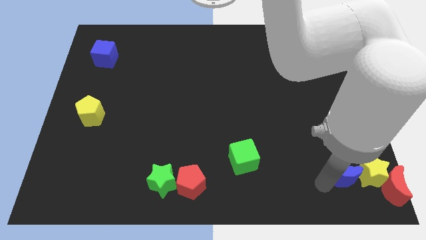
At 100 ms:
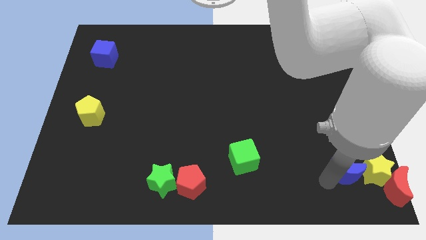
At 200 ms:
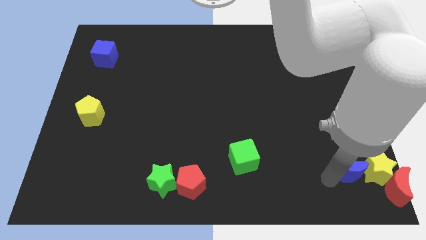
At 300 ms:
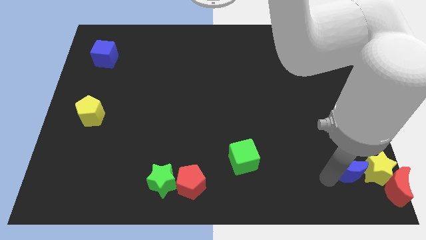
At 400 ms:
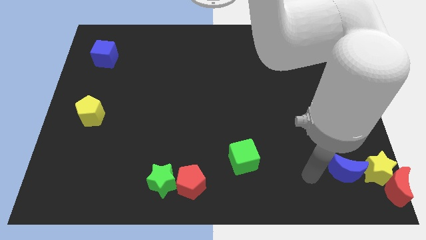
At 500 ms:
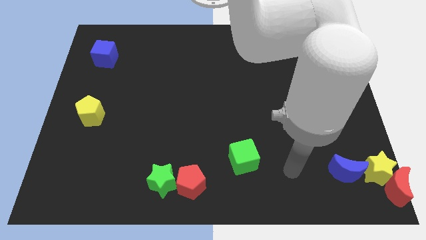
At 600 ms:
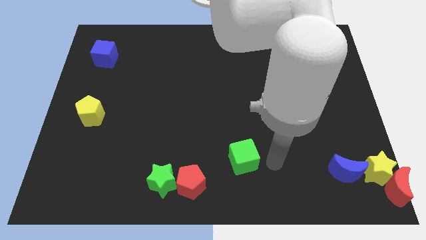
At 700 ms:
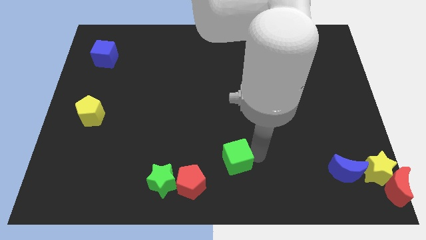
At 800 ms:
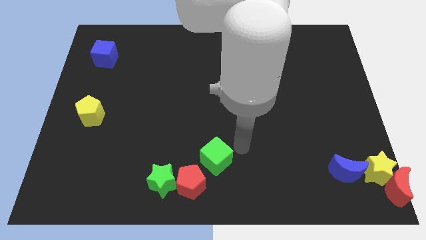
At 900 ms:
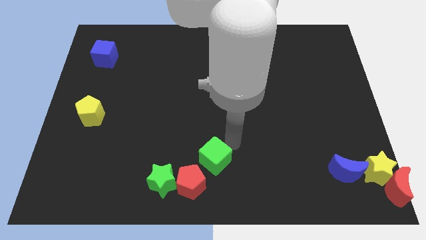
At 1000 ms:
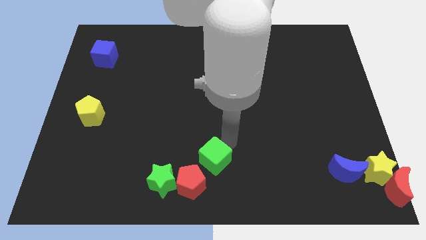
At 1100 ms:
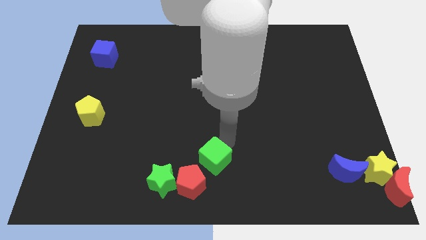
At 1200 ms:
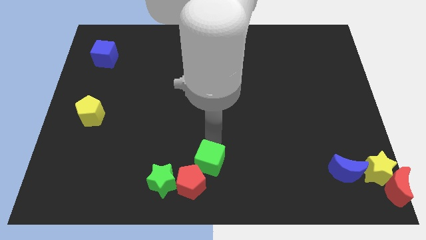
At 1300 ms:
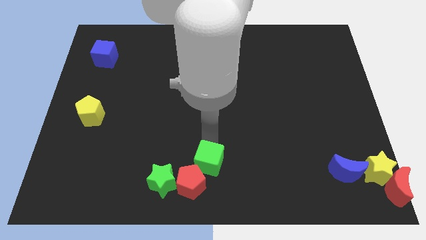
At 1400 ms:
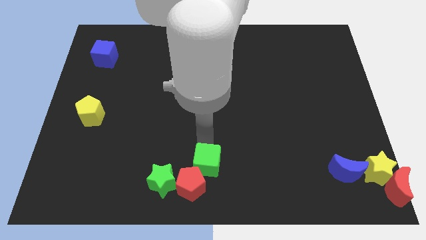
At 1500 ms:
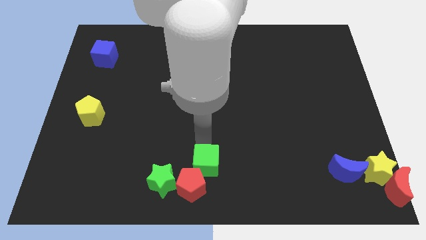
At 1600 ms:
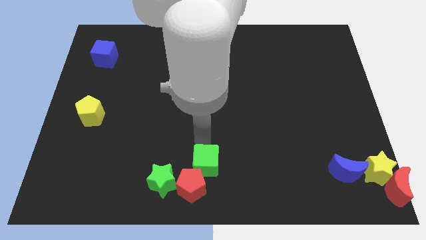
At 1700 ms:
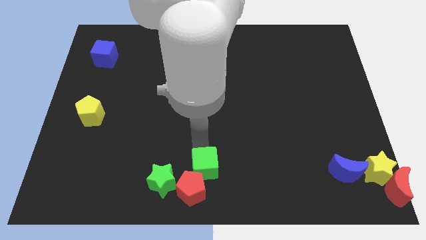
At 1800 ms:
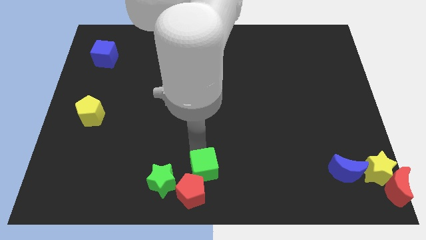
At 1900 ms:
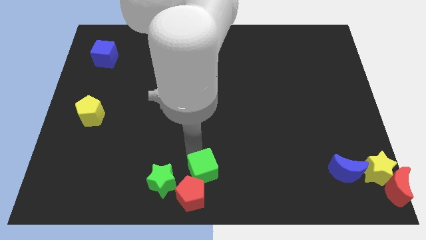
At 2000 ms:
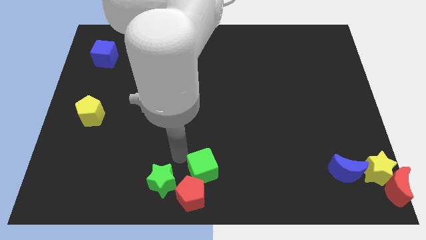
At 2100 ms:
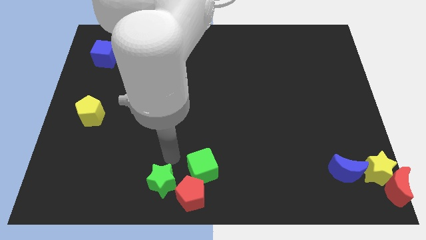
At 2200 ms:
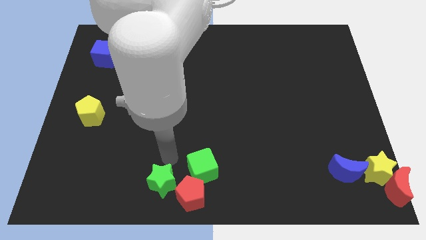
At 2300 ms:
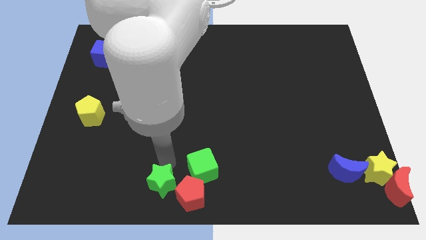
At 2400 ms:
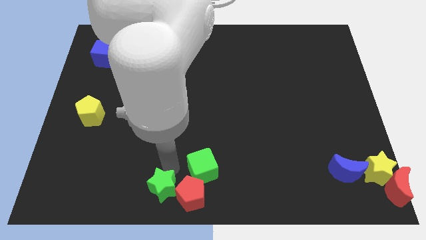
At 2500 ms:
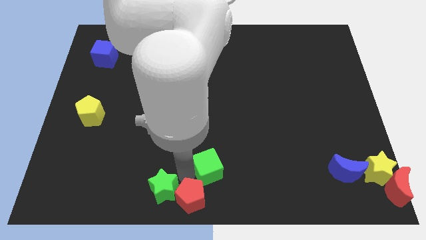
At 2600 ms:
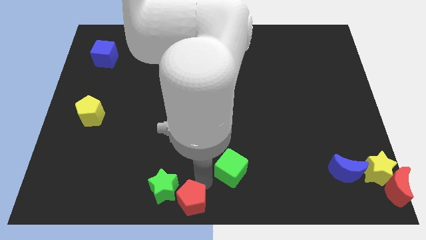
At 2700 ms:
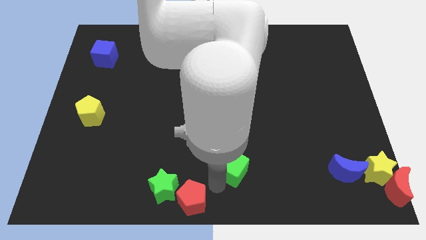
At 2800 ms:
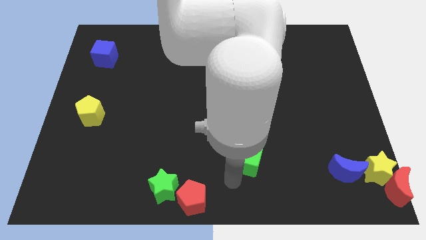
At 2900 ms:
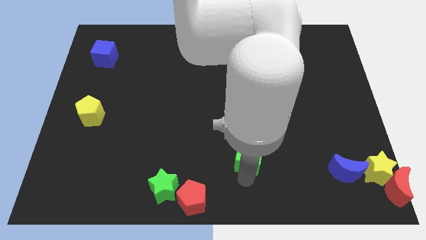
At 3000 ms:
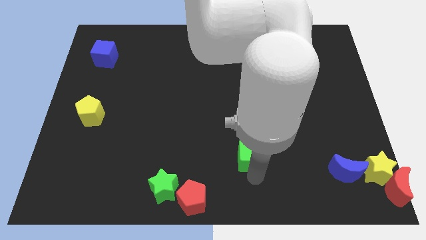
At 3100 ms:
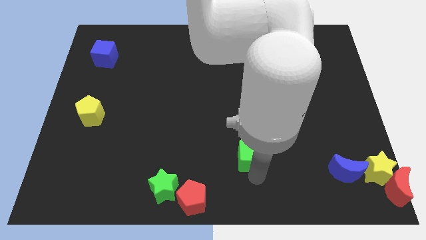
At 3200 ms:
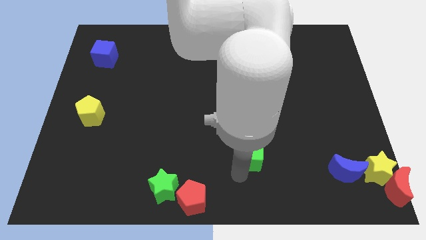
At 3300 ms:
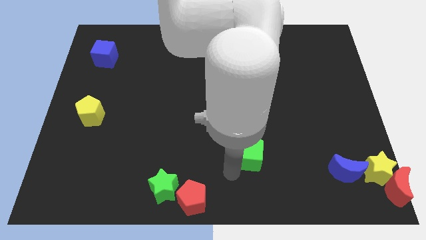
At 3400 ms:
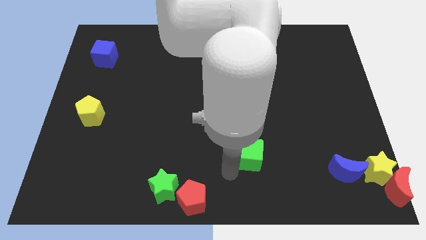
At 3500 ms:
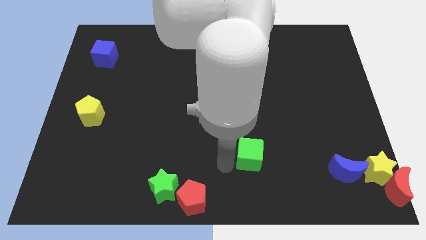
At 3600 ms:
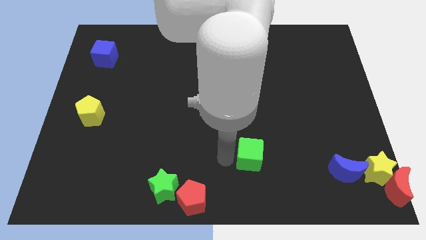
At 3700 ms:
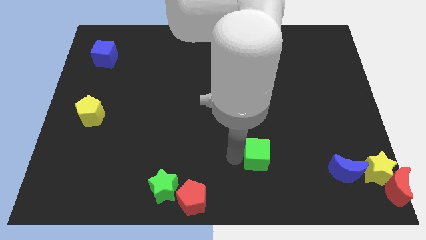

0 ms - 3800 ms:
place green cube to the left of blue moon

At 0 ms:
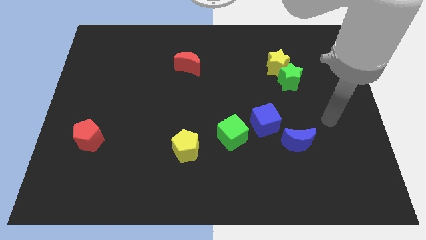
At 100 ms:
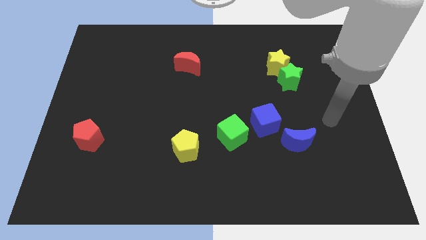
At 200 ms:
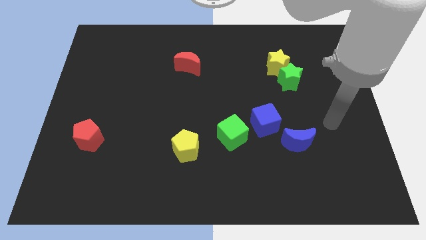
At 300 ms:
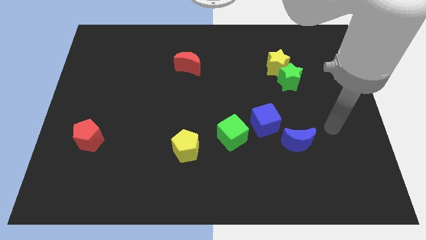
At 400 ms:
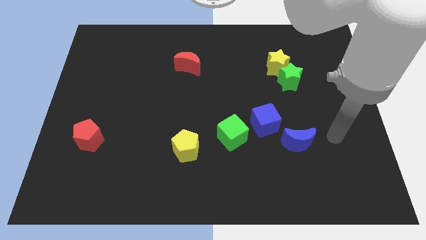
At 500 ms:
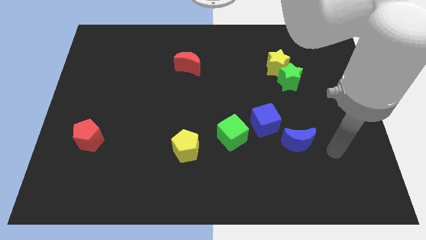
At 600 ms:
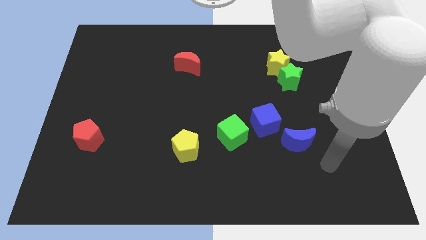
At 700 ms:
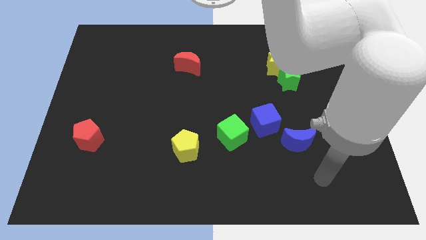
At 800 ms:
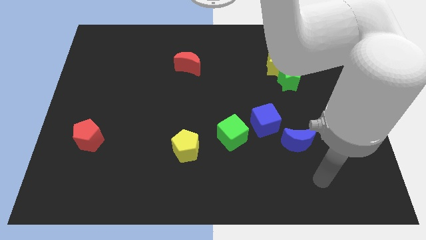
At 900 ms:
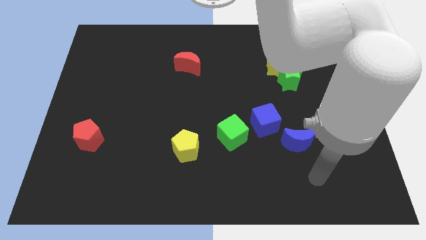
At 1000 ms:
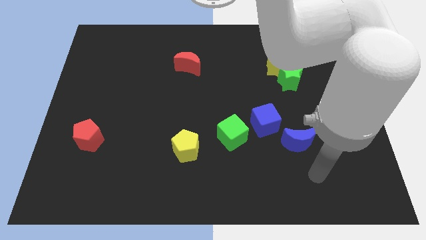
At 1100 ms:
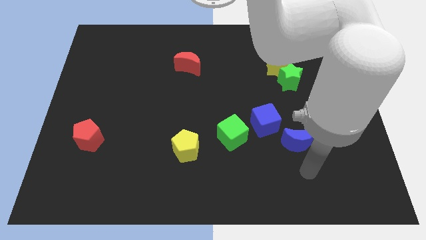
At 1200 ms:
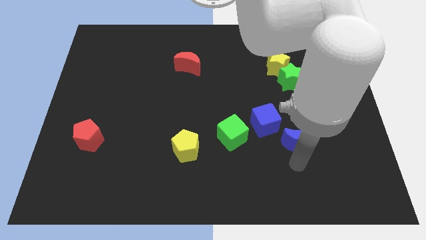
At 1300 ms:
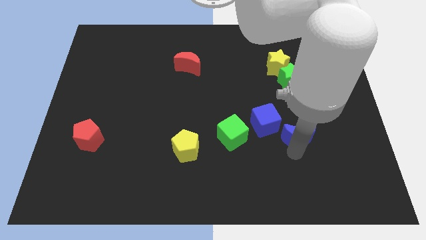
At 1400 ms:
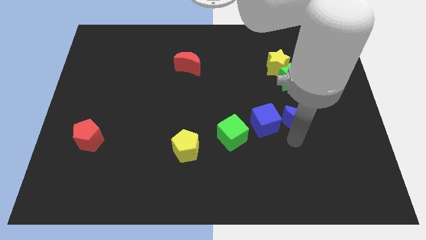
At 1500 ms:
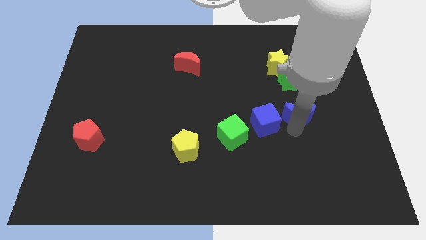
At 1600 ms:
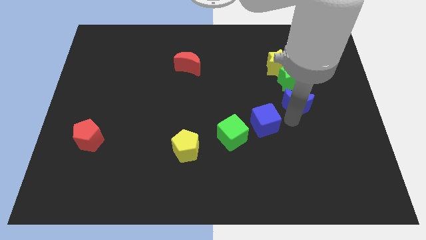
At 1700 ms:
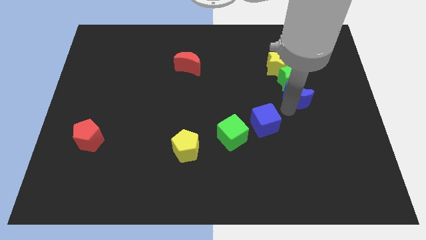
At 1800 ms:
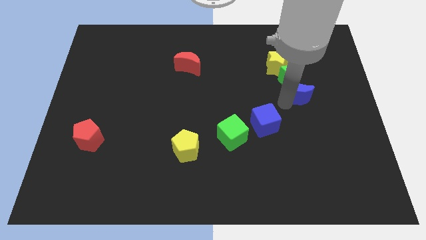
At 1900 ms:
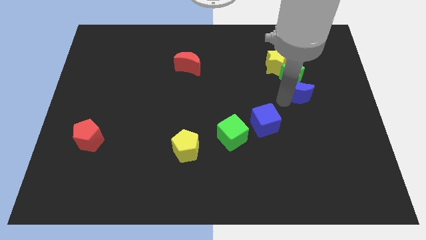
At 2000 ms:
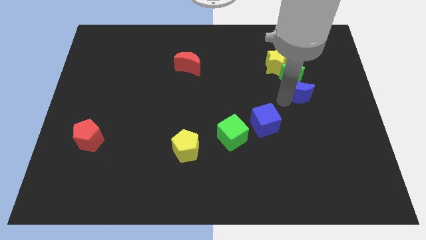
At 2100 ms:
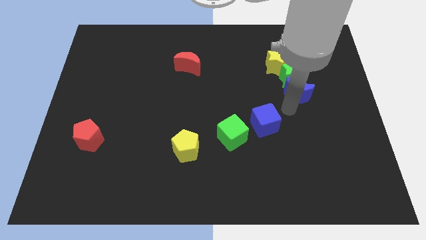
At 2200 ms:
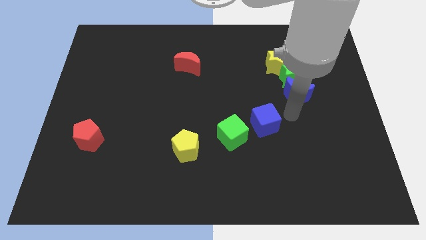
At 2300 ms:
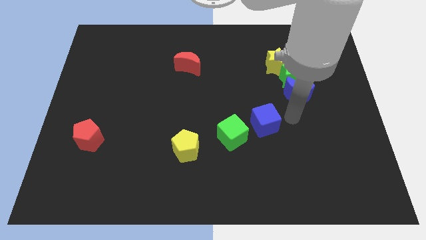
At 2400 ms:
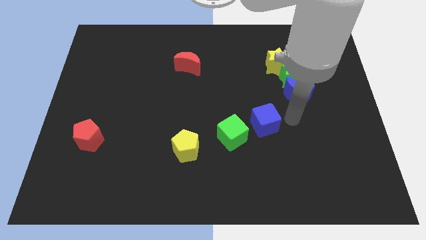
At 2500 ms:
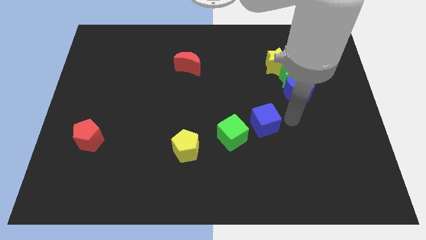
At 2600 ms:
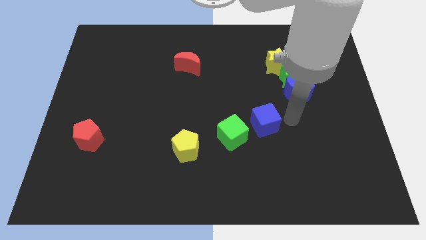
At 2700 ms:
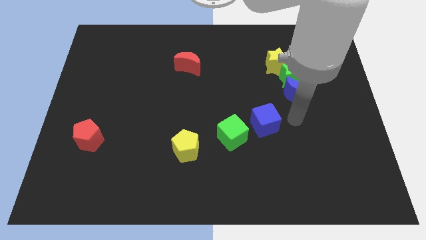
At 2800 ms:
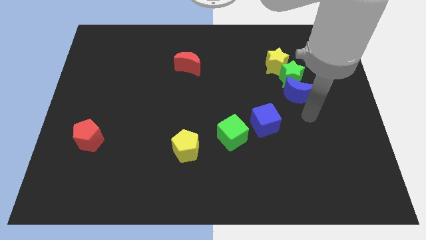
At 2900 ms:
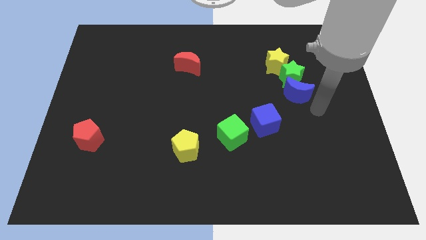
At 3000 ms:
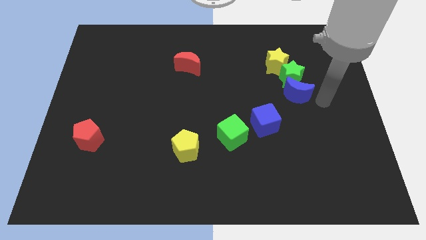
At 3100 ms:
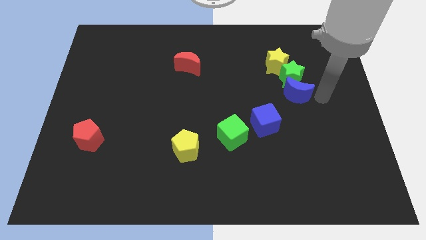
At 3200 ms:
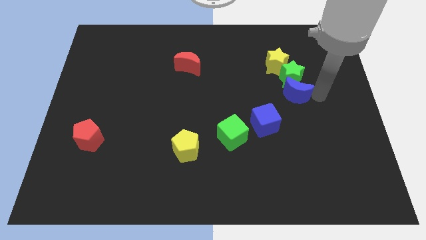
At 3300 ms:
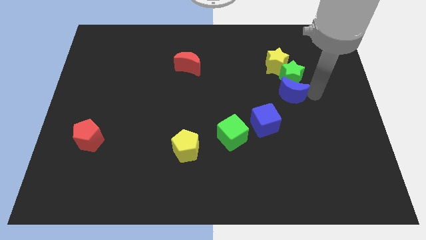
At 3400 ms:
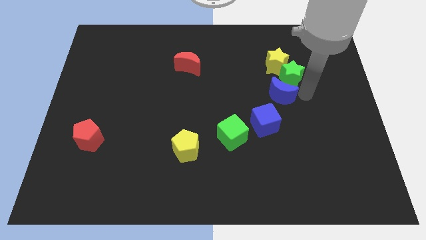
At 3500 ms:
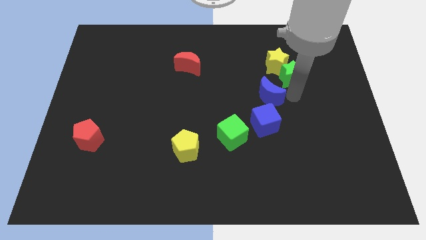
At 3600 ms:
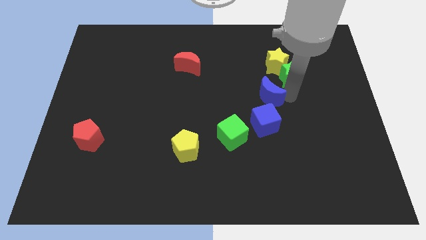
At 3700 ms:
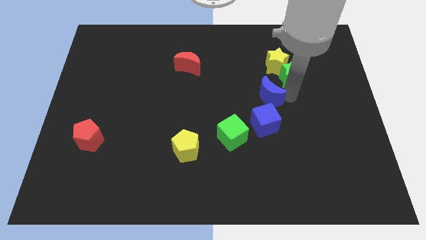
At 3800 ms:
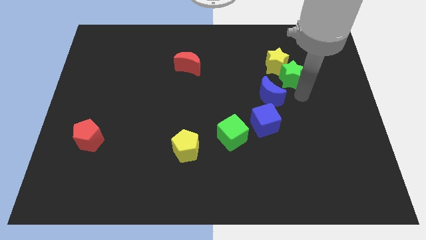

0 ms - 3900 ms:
move blue crescent towards the green star

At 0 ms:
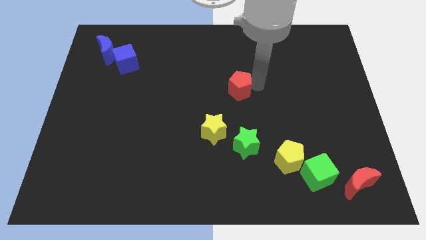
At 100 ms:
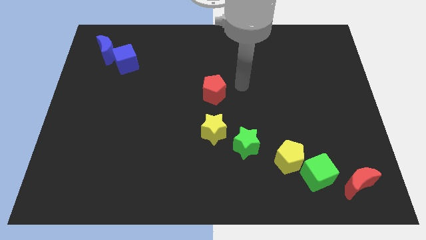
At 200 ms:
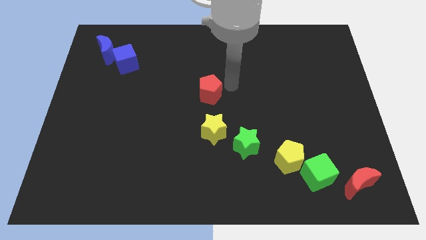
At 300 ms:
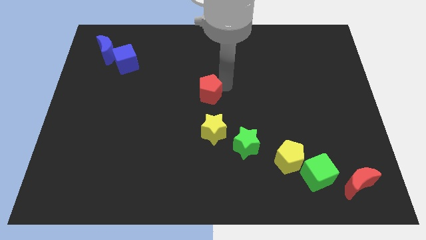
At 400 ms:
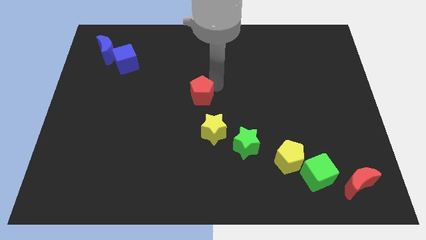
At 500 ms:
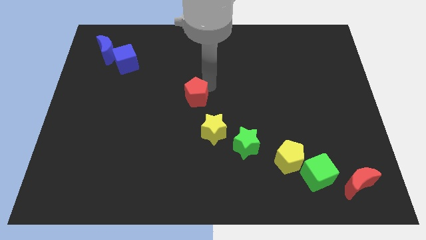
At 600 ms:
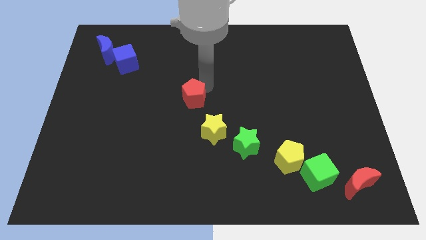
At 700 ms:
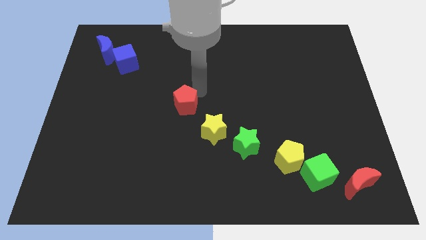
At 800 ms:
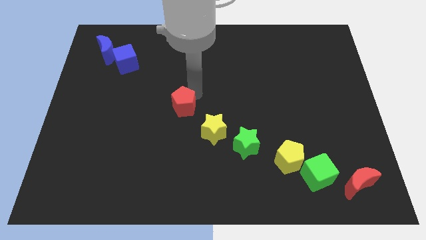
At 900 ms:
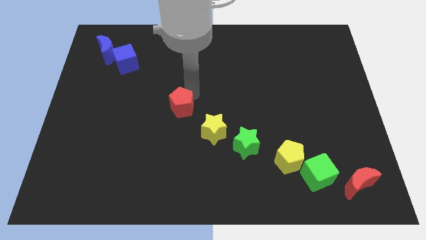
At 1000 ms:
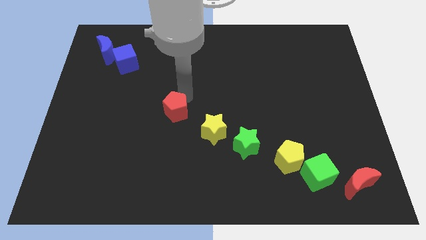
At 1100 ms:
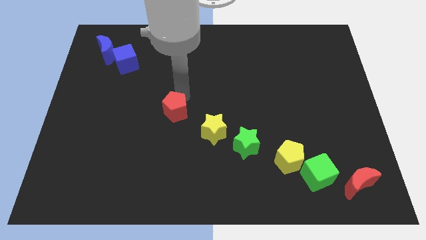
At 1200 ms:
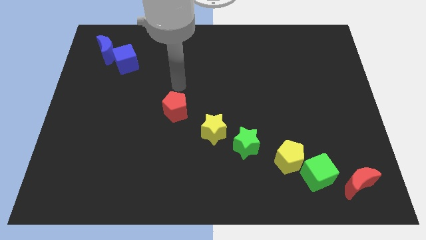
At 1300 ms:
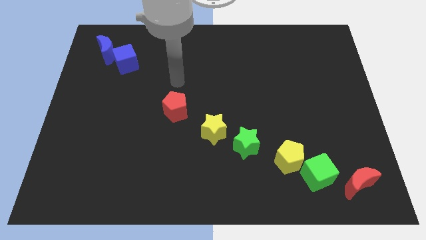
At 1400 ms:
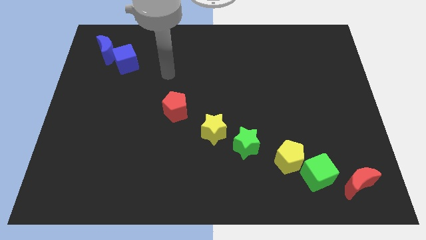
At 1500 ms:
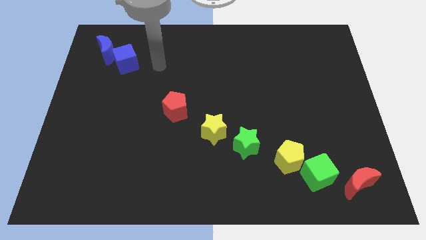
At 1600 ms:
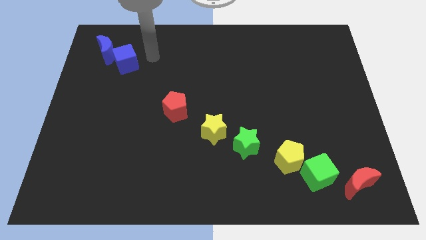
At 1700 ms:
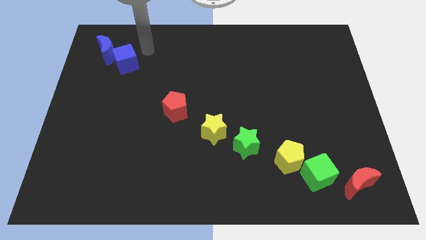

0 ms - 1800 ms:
place the red pentagon diagonally left to the yellow star
